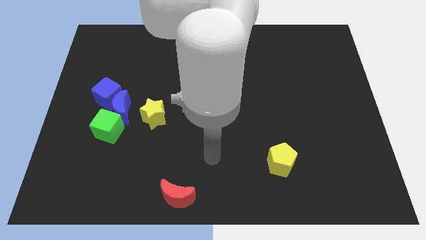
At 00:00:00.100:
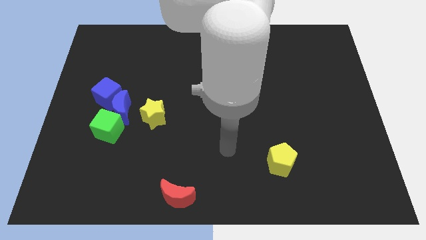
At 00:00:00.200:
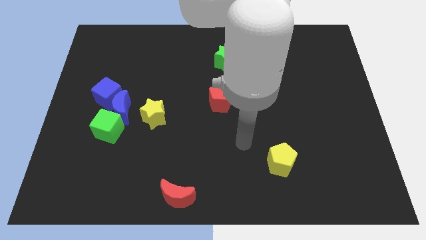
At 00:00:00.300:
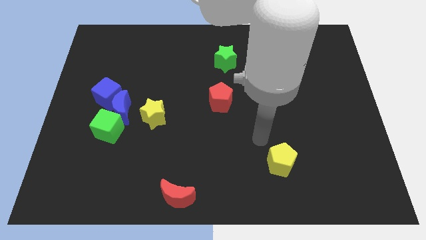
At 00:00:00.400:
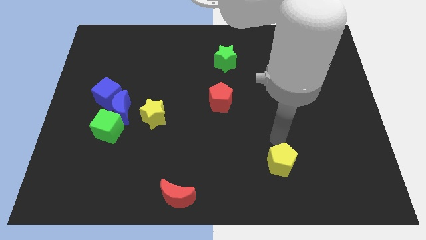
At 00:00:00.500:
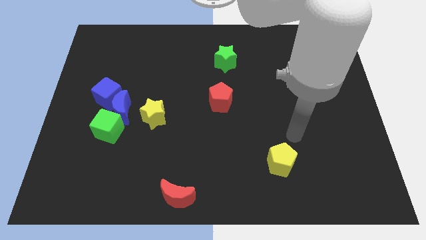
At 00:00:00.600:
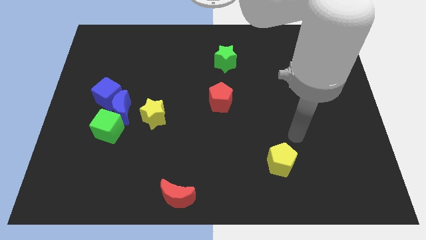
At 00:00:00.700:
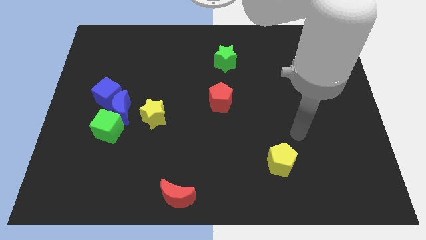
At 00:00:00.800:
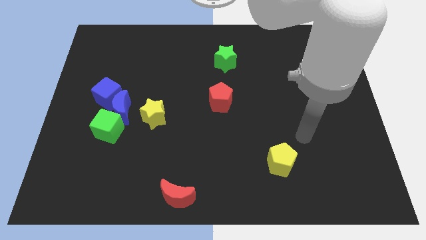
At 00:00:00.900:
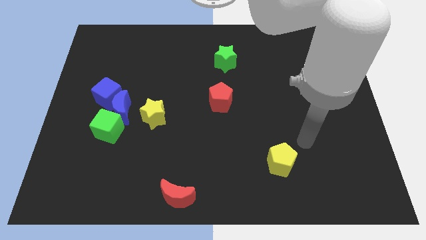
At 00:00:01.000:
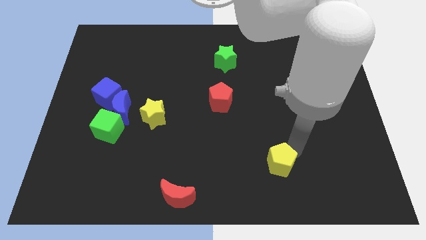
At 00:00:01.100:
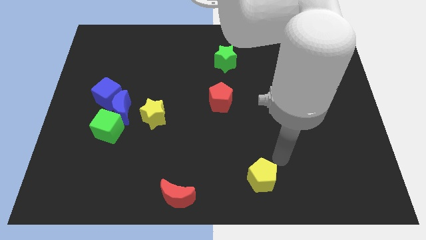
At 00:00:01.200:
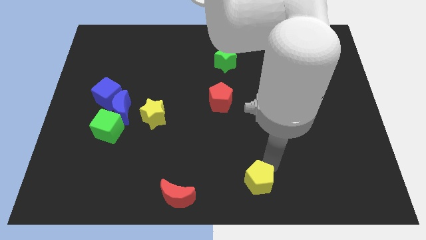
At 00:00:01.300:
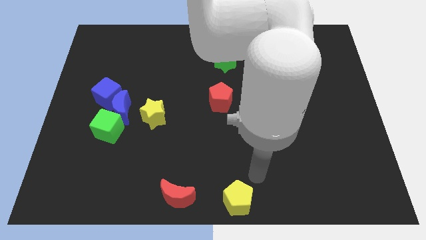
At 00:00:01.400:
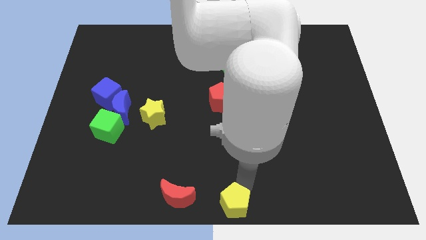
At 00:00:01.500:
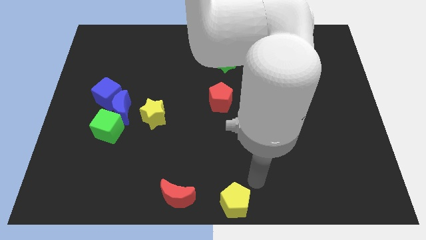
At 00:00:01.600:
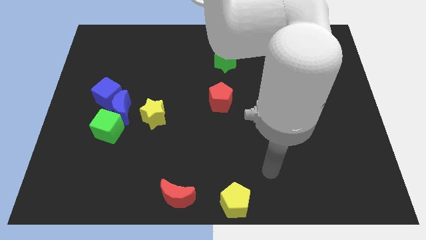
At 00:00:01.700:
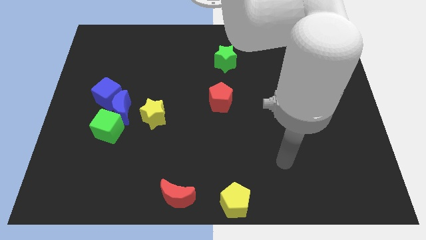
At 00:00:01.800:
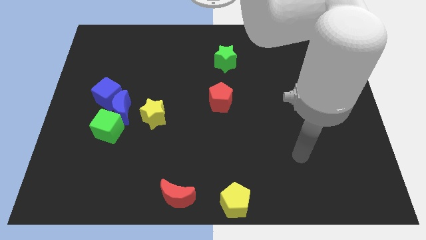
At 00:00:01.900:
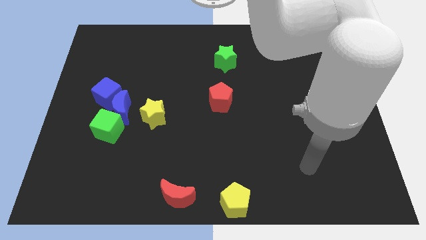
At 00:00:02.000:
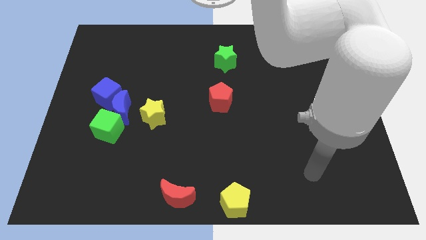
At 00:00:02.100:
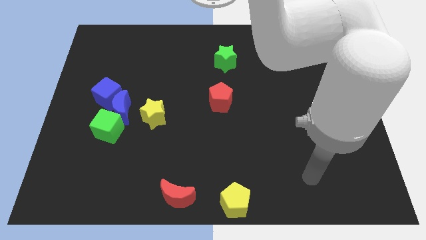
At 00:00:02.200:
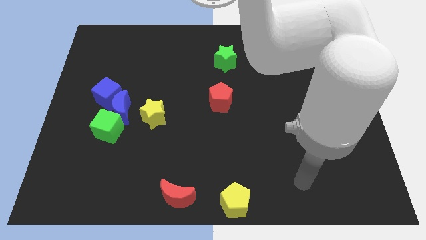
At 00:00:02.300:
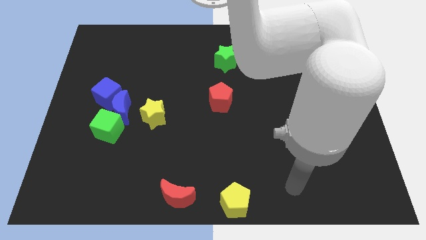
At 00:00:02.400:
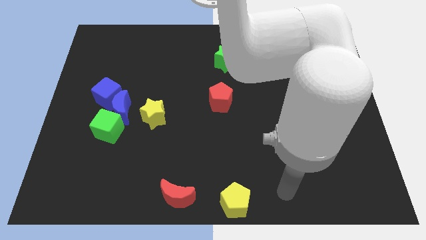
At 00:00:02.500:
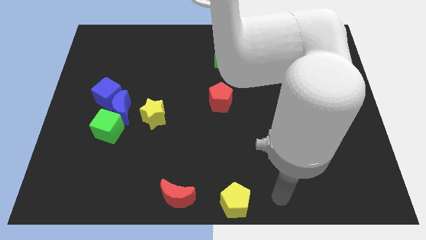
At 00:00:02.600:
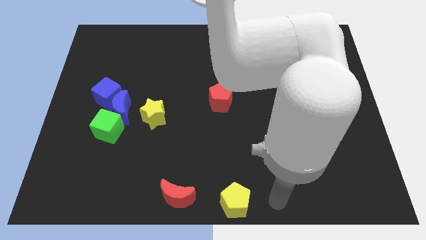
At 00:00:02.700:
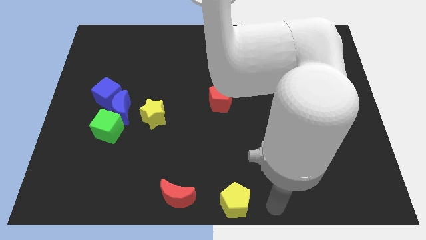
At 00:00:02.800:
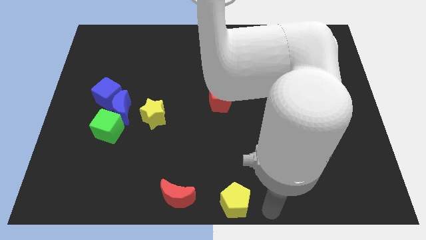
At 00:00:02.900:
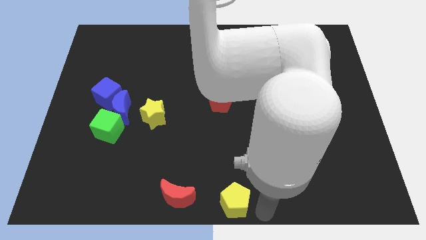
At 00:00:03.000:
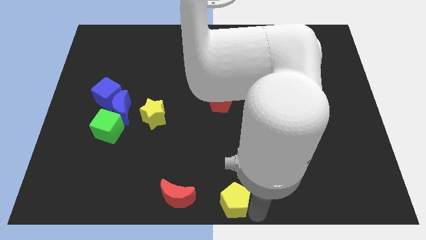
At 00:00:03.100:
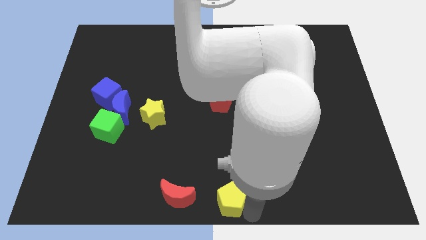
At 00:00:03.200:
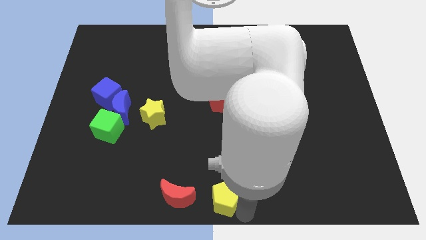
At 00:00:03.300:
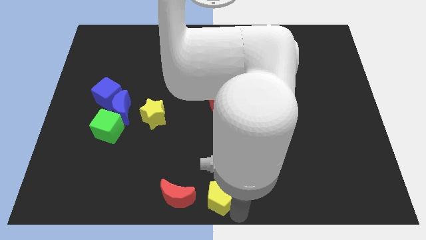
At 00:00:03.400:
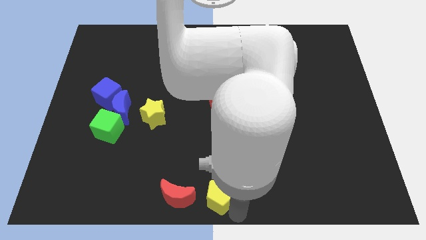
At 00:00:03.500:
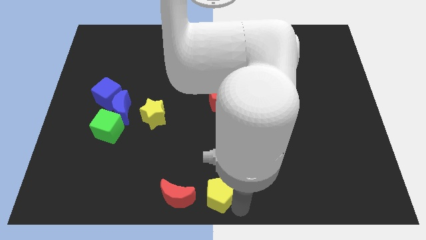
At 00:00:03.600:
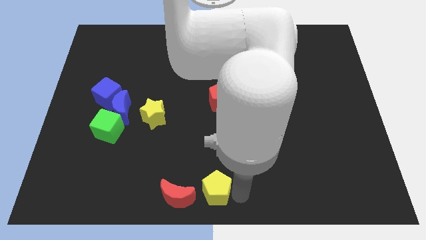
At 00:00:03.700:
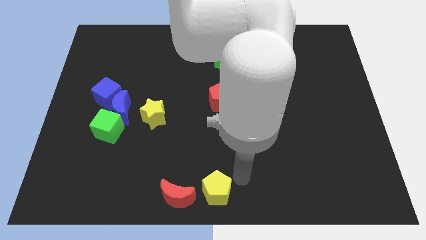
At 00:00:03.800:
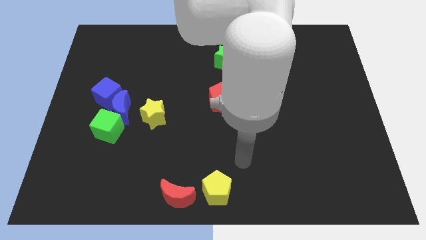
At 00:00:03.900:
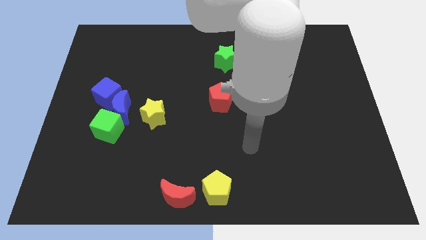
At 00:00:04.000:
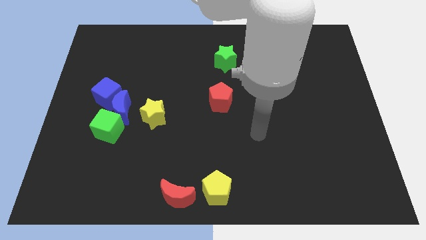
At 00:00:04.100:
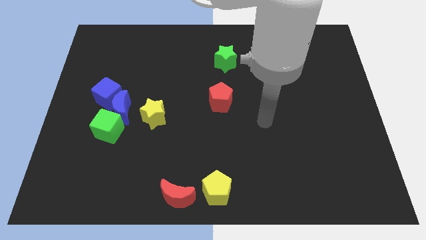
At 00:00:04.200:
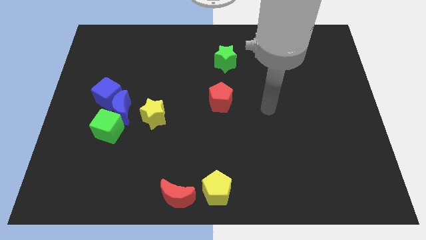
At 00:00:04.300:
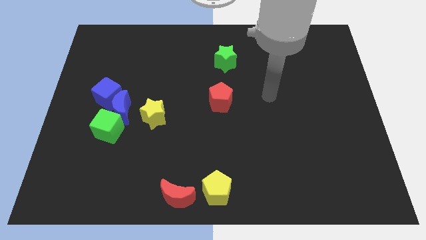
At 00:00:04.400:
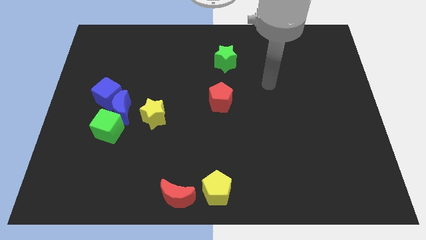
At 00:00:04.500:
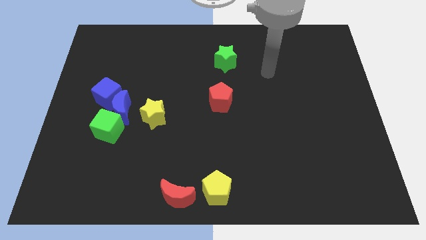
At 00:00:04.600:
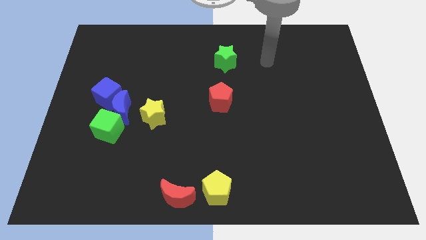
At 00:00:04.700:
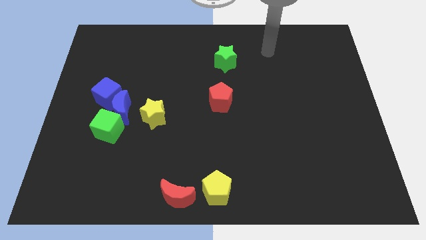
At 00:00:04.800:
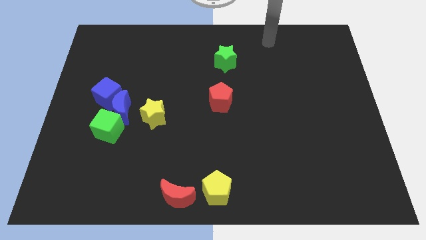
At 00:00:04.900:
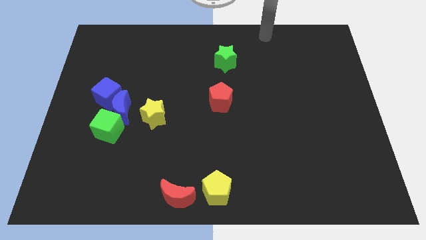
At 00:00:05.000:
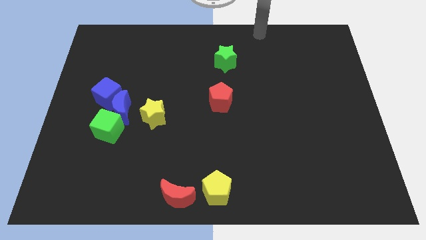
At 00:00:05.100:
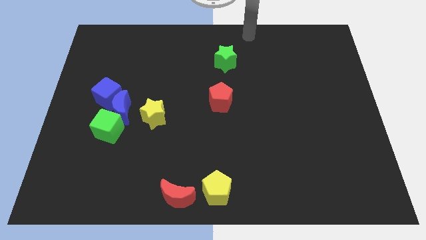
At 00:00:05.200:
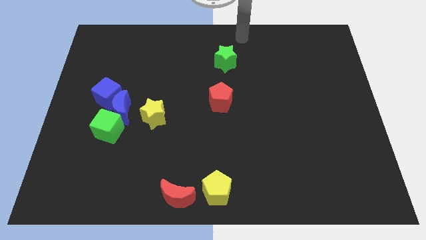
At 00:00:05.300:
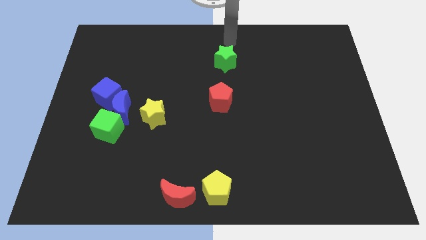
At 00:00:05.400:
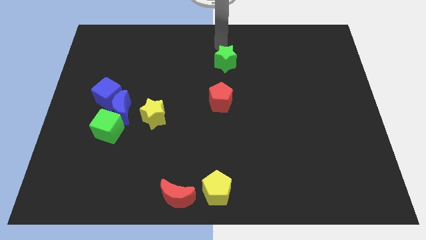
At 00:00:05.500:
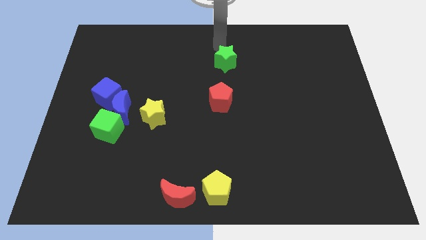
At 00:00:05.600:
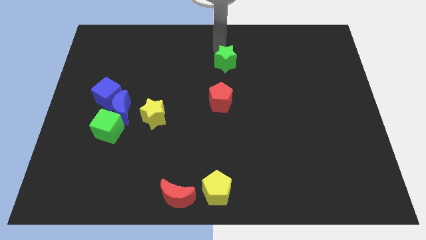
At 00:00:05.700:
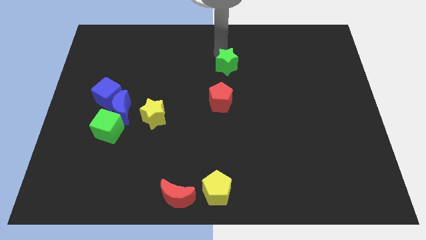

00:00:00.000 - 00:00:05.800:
move the yellow pentagon to the bottom center of the board

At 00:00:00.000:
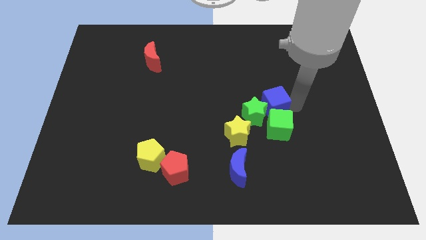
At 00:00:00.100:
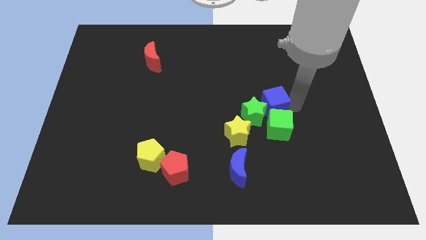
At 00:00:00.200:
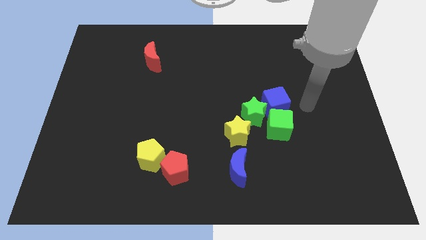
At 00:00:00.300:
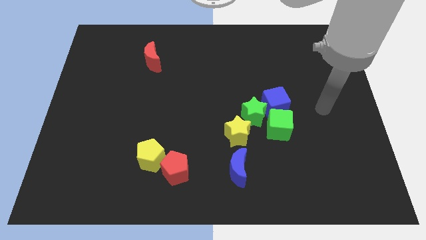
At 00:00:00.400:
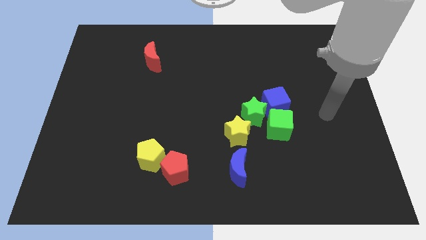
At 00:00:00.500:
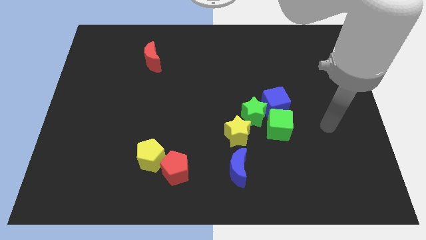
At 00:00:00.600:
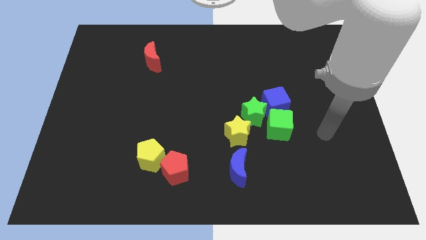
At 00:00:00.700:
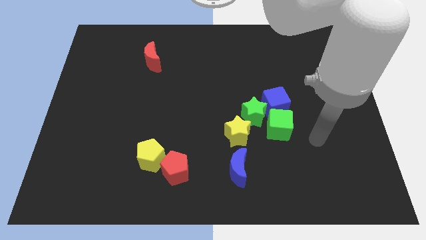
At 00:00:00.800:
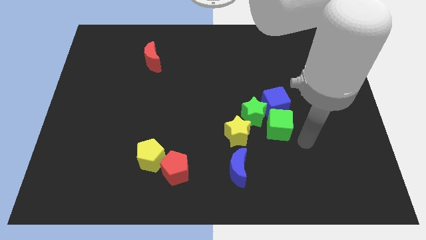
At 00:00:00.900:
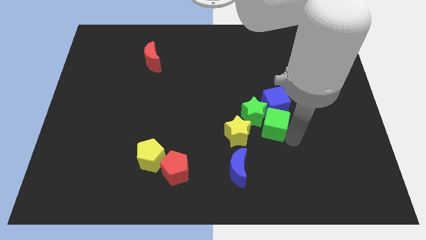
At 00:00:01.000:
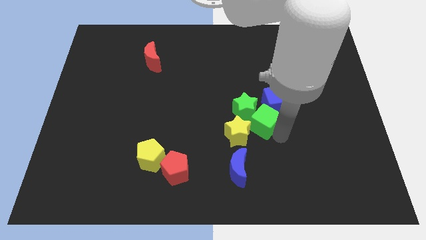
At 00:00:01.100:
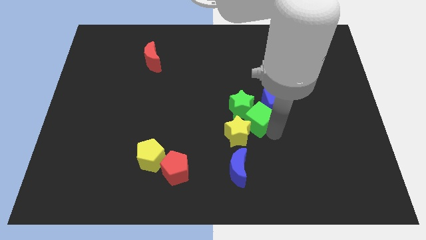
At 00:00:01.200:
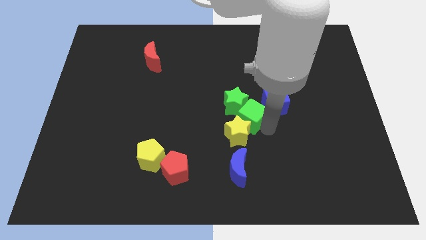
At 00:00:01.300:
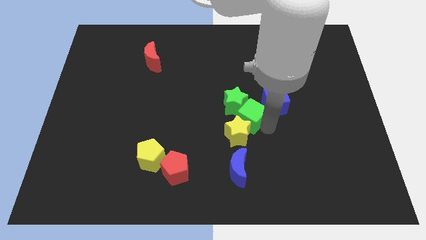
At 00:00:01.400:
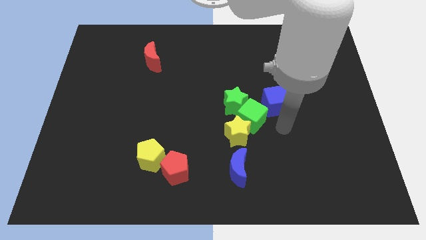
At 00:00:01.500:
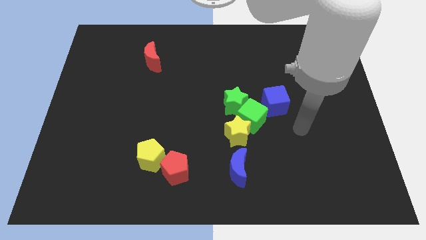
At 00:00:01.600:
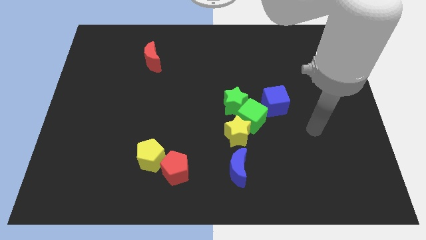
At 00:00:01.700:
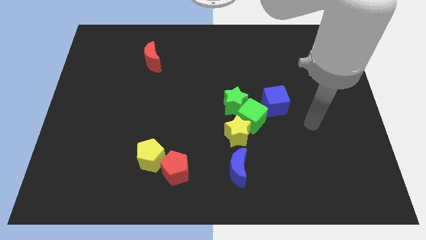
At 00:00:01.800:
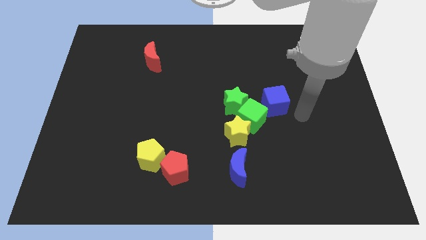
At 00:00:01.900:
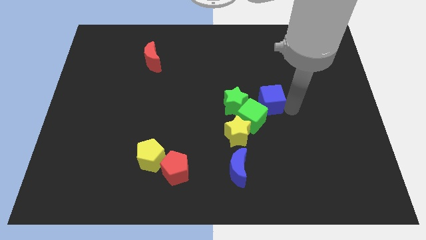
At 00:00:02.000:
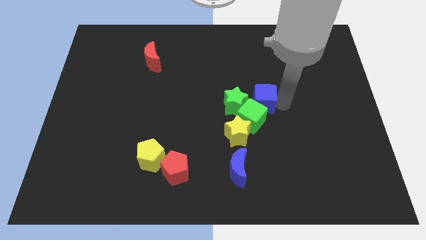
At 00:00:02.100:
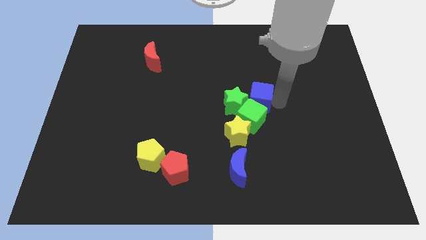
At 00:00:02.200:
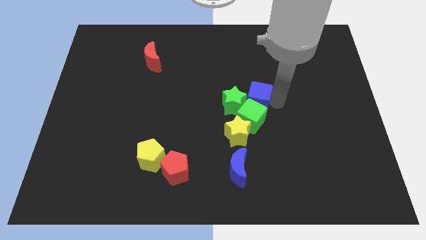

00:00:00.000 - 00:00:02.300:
adjust the green blocks and blue cube to the center

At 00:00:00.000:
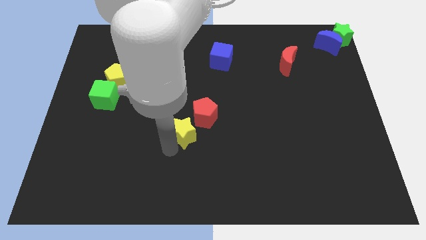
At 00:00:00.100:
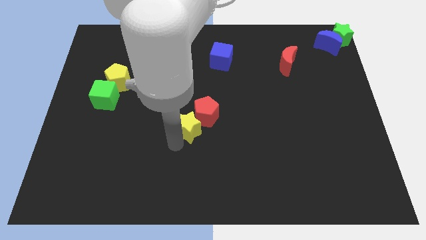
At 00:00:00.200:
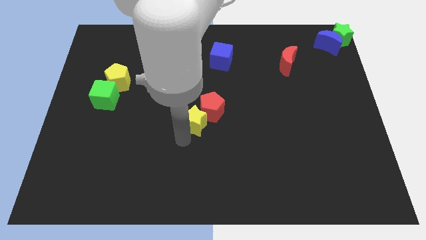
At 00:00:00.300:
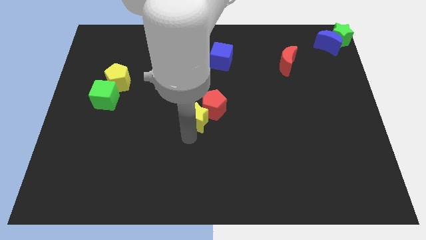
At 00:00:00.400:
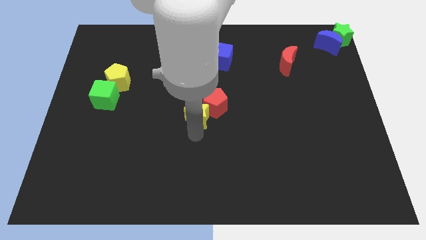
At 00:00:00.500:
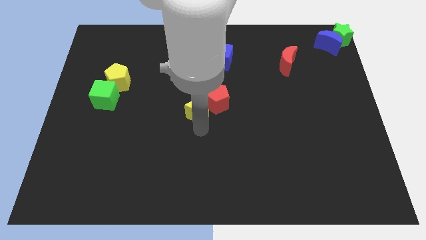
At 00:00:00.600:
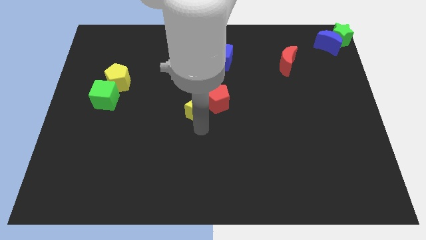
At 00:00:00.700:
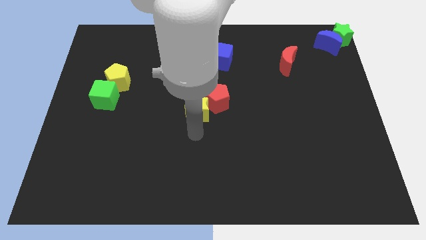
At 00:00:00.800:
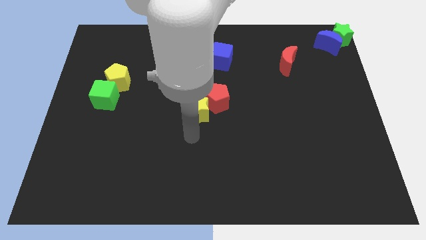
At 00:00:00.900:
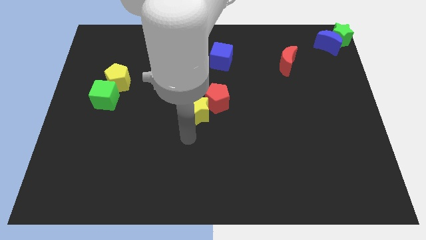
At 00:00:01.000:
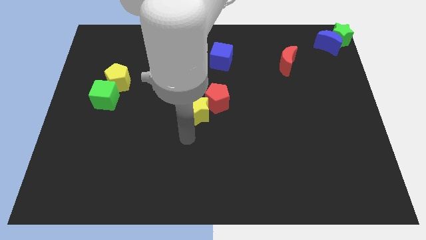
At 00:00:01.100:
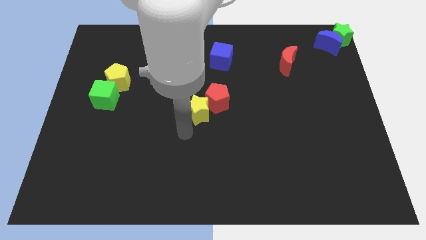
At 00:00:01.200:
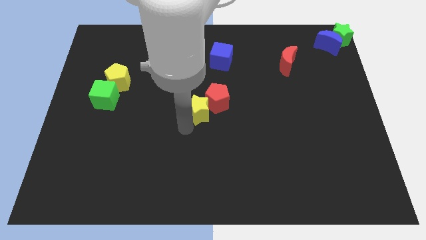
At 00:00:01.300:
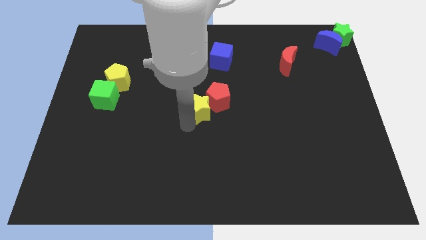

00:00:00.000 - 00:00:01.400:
push the yellow star into the red pentagon
